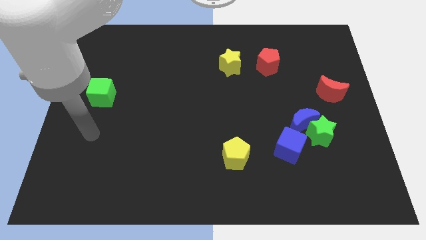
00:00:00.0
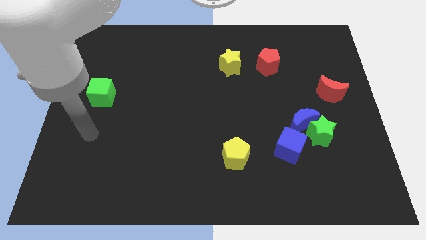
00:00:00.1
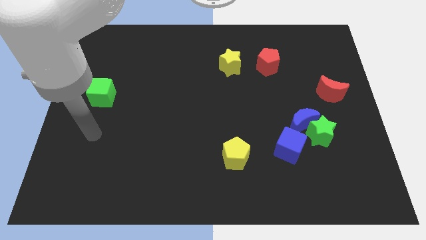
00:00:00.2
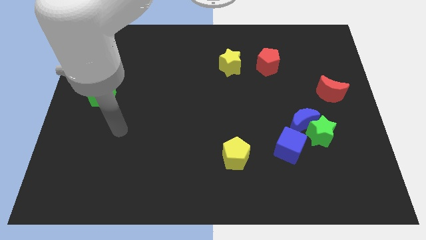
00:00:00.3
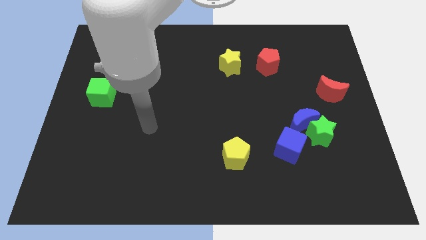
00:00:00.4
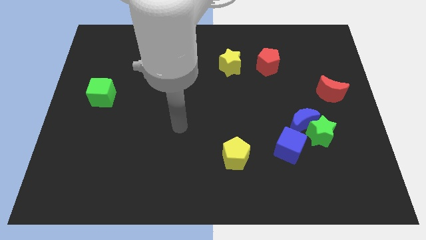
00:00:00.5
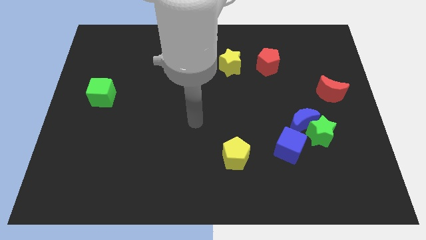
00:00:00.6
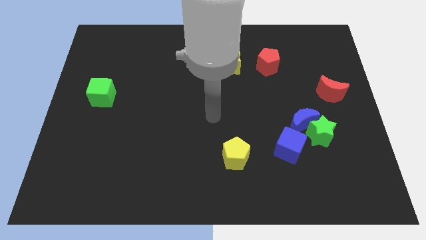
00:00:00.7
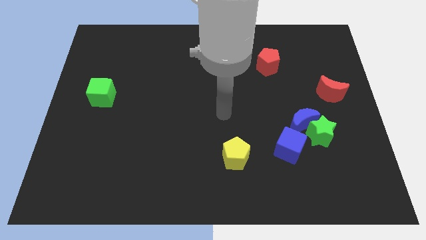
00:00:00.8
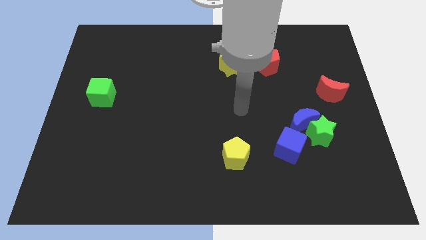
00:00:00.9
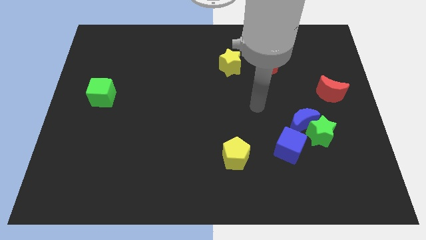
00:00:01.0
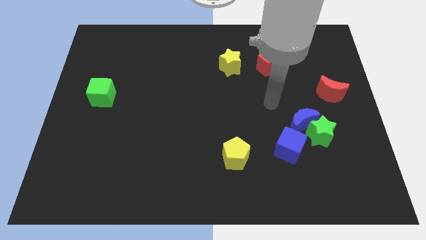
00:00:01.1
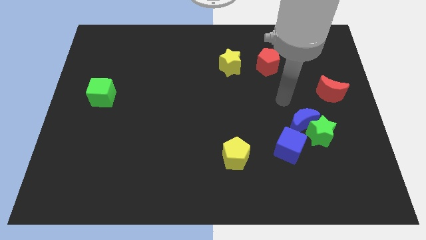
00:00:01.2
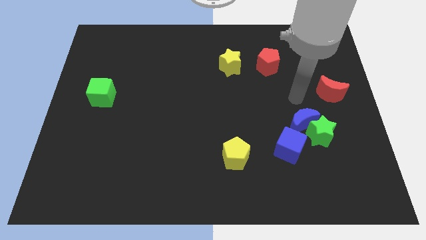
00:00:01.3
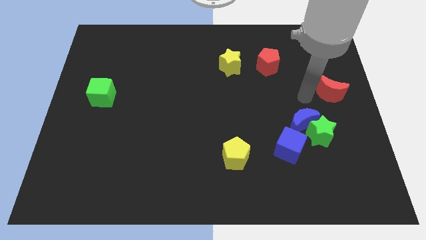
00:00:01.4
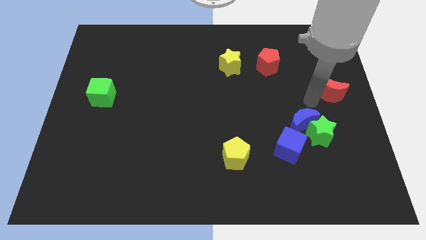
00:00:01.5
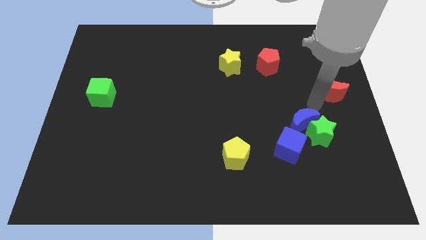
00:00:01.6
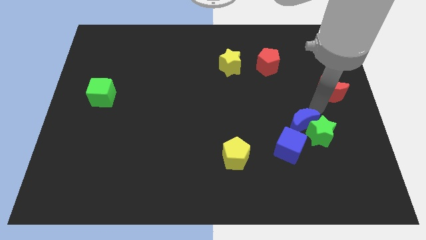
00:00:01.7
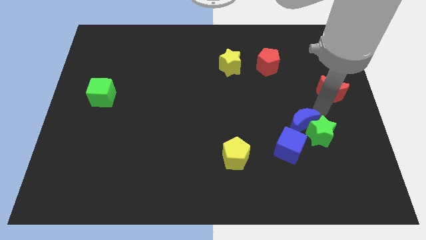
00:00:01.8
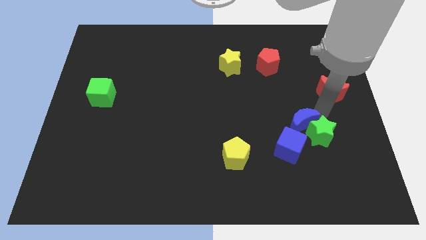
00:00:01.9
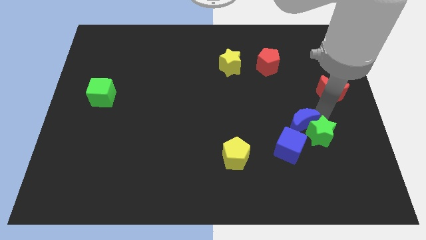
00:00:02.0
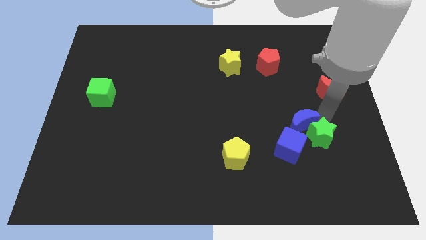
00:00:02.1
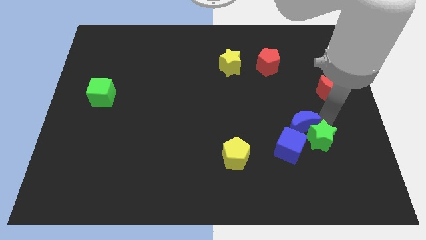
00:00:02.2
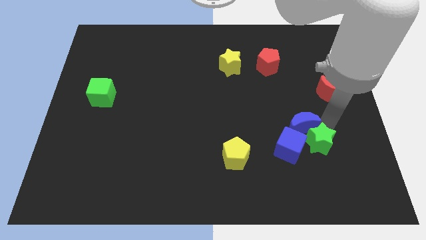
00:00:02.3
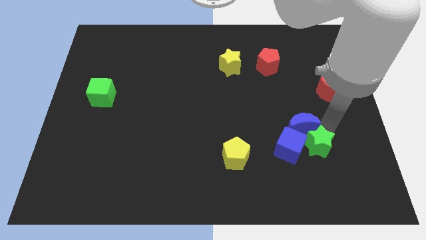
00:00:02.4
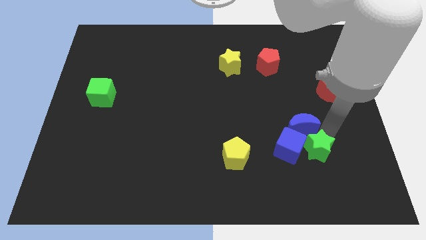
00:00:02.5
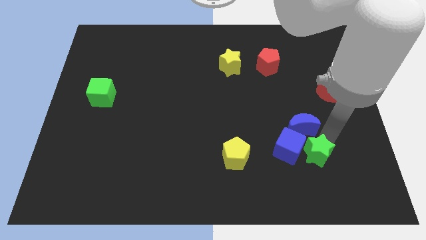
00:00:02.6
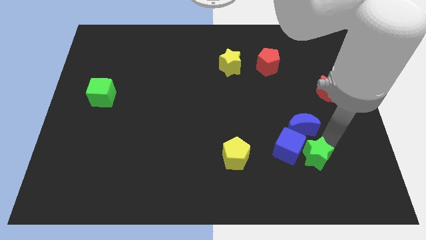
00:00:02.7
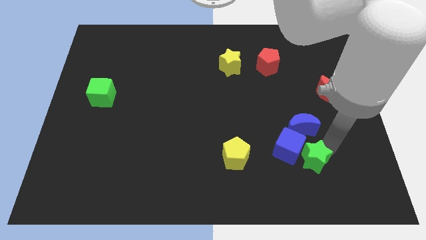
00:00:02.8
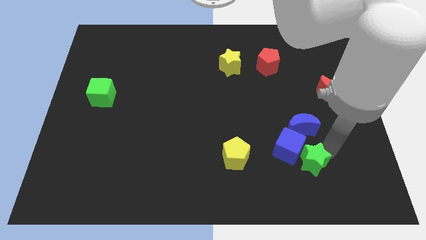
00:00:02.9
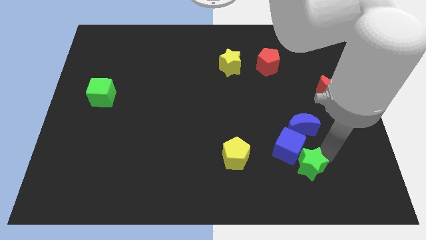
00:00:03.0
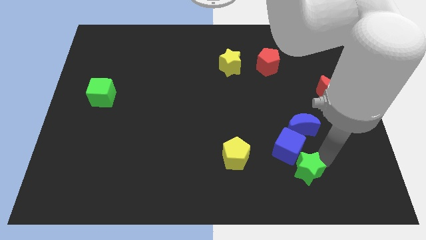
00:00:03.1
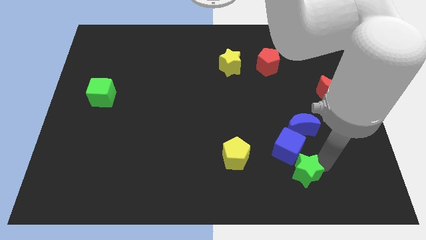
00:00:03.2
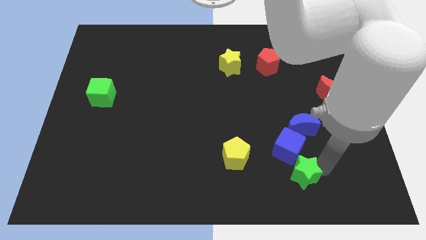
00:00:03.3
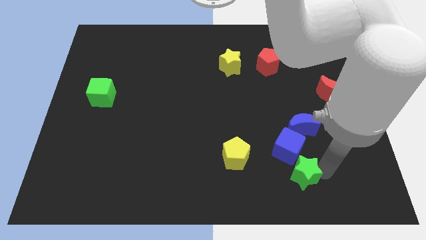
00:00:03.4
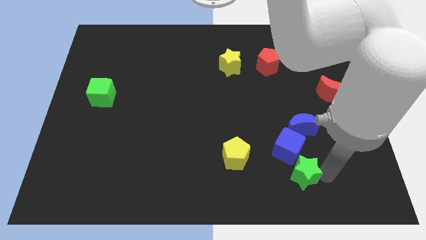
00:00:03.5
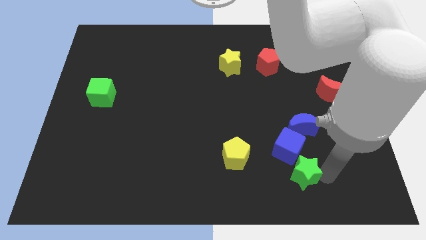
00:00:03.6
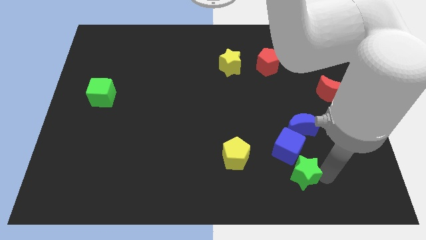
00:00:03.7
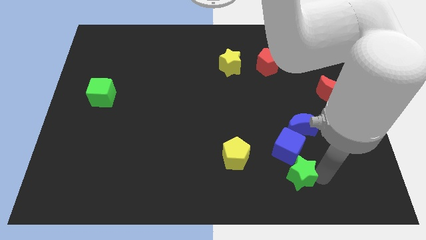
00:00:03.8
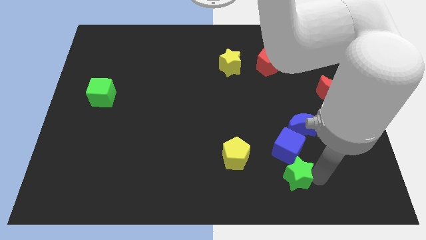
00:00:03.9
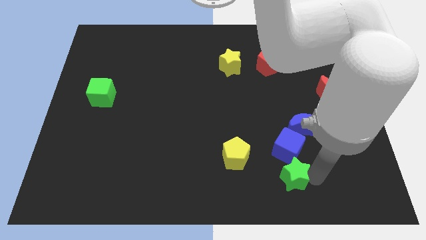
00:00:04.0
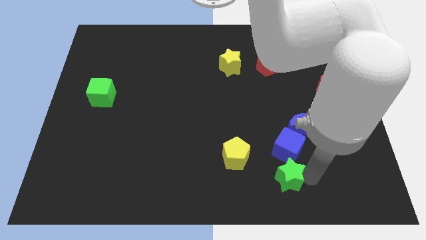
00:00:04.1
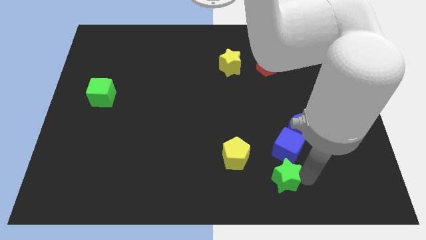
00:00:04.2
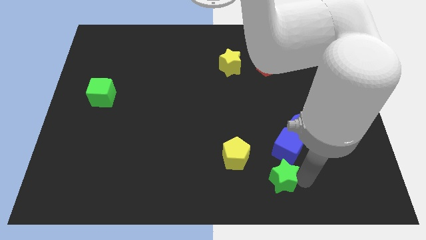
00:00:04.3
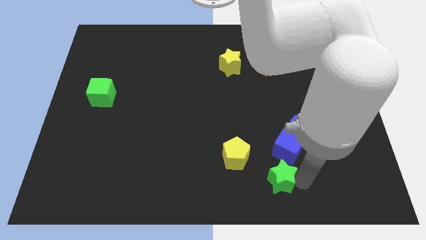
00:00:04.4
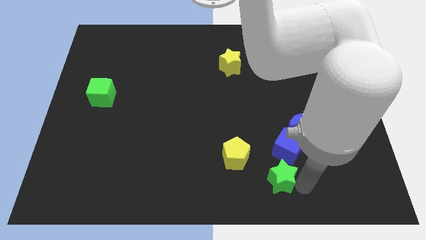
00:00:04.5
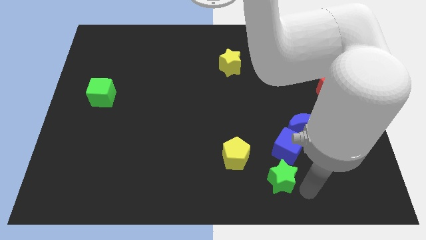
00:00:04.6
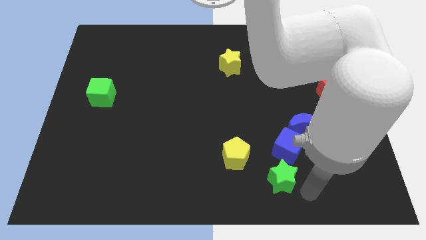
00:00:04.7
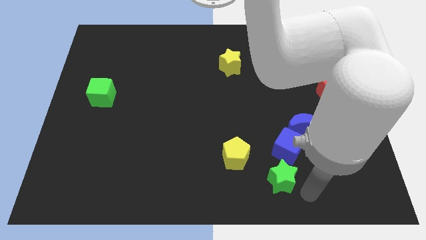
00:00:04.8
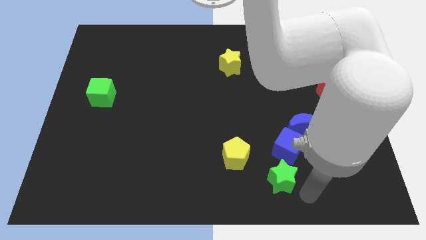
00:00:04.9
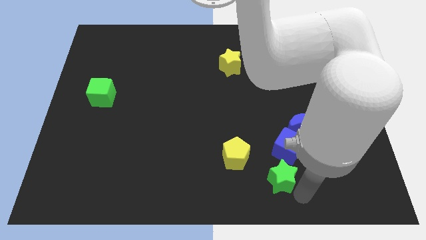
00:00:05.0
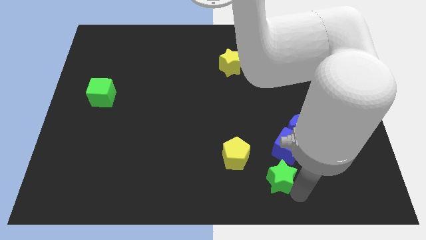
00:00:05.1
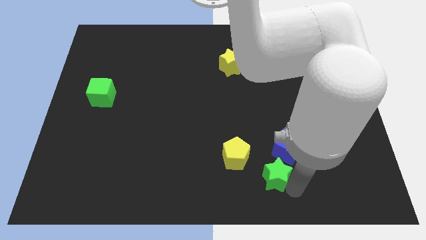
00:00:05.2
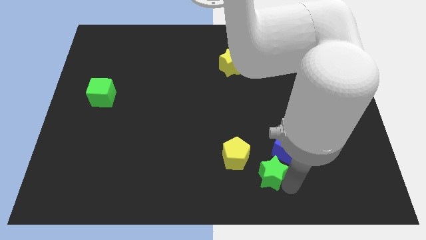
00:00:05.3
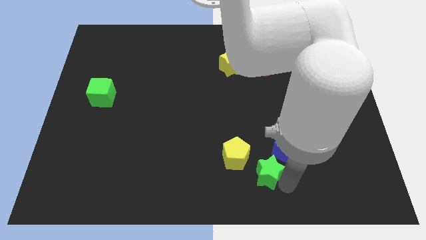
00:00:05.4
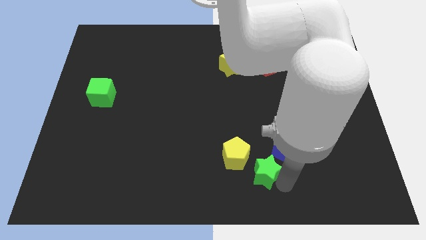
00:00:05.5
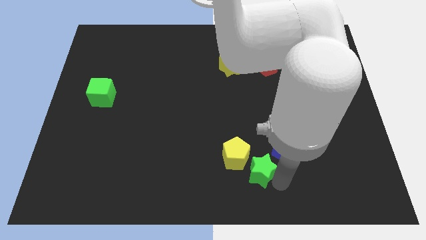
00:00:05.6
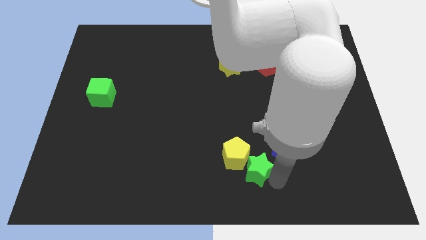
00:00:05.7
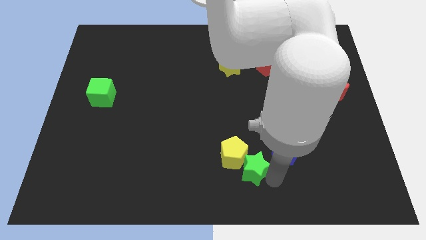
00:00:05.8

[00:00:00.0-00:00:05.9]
push the green star next to the yellow pentagon

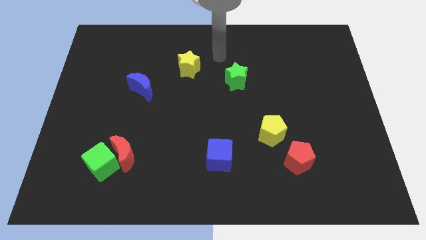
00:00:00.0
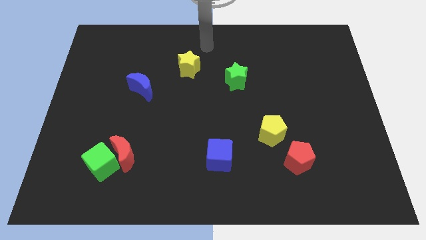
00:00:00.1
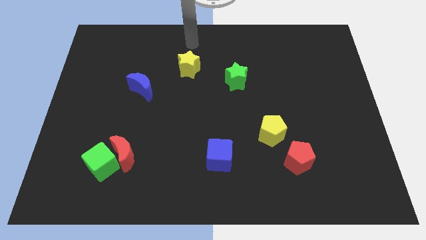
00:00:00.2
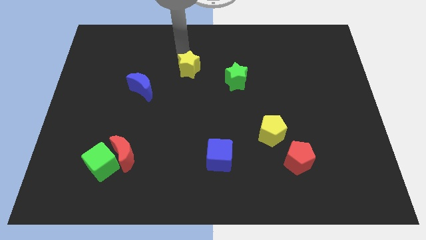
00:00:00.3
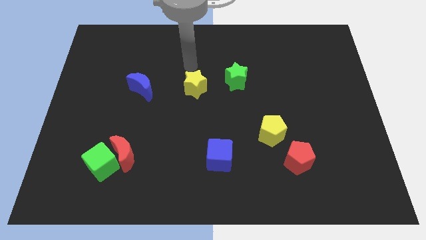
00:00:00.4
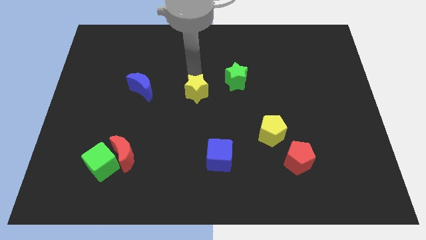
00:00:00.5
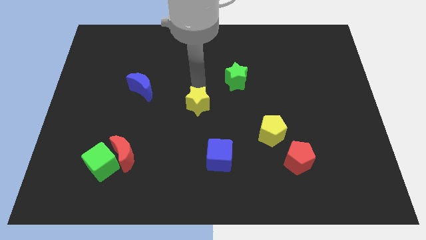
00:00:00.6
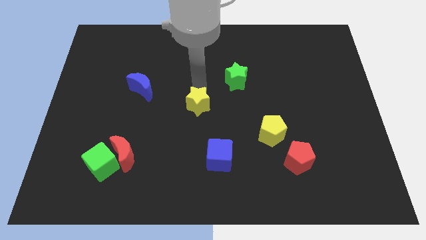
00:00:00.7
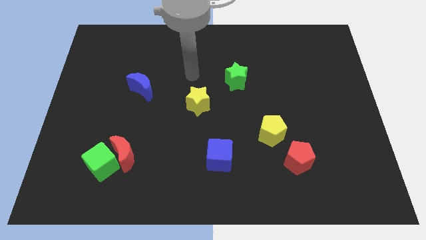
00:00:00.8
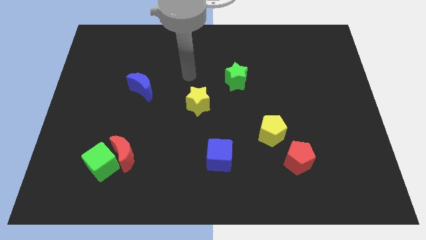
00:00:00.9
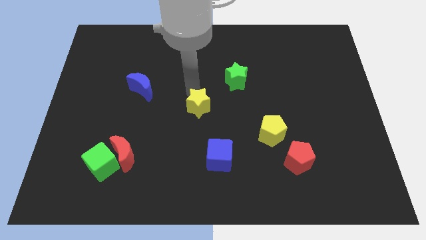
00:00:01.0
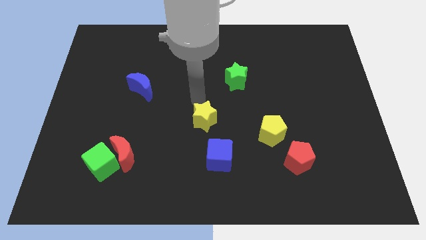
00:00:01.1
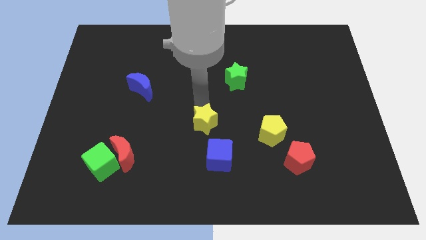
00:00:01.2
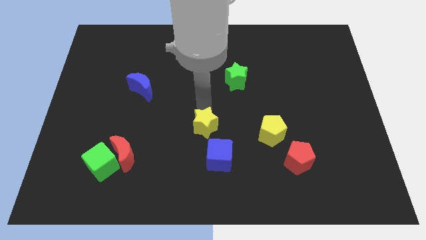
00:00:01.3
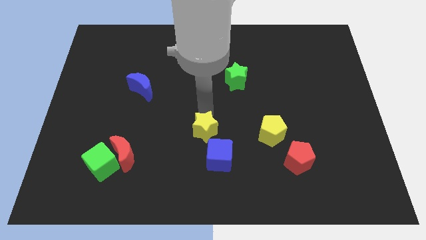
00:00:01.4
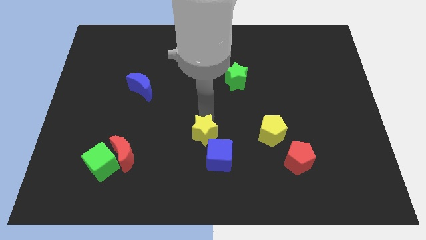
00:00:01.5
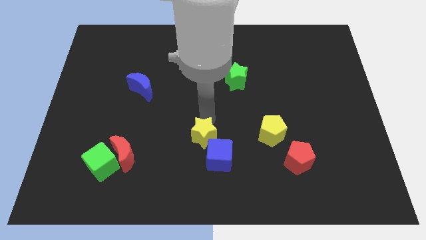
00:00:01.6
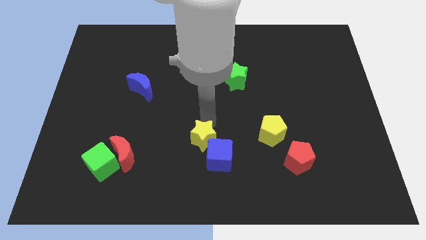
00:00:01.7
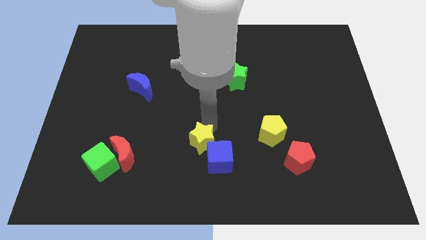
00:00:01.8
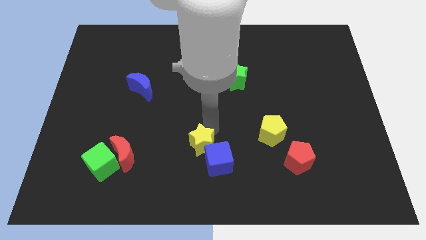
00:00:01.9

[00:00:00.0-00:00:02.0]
put the yellow star next to the blue cube

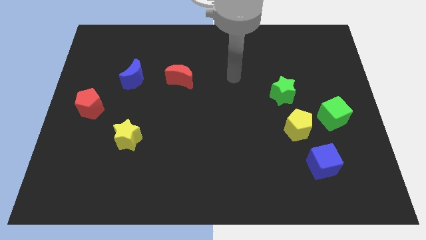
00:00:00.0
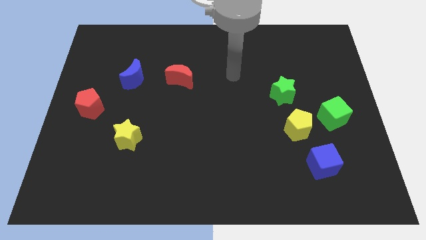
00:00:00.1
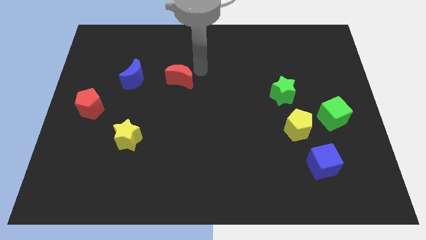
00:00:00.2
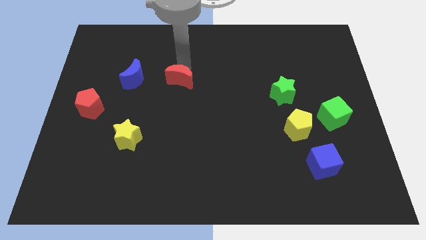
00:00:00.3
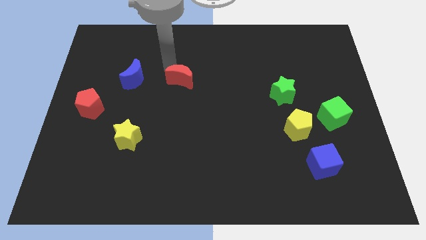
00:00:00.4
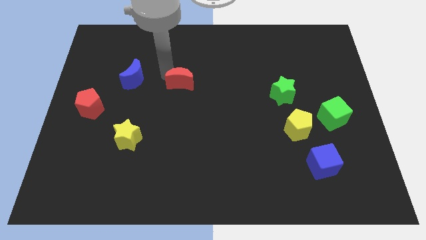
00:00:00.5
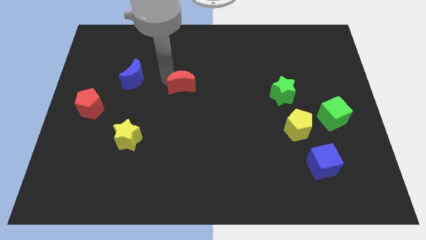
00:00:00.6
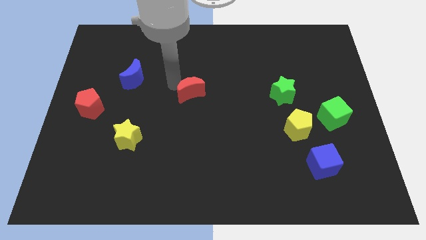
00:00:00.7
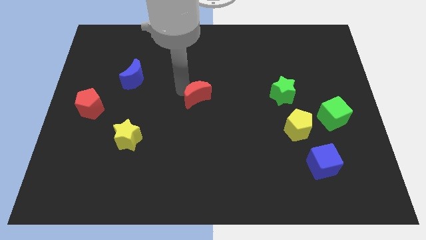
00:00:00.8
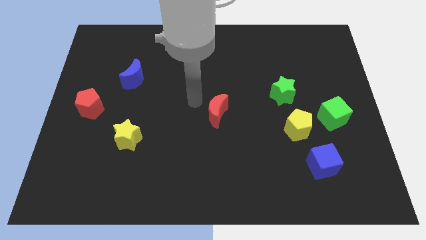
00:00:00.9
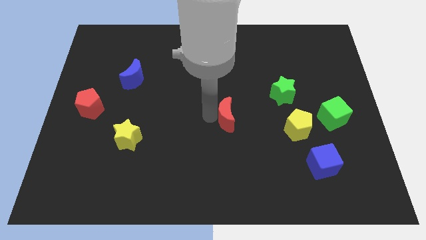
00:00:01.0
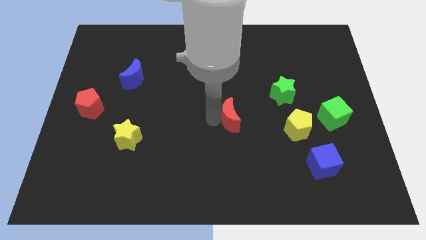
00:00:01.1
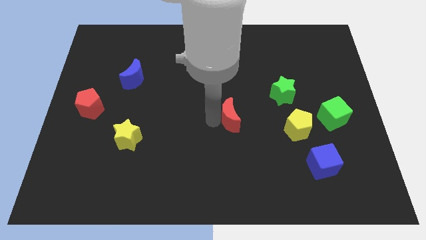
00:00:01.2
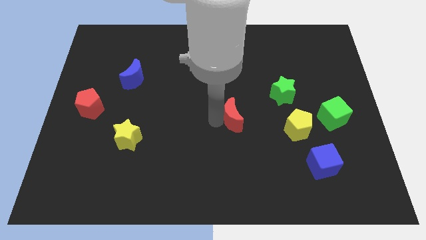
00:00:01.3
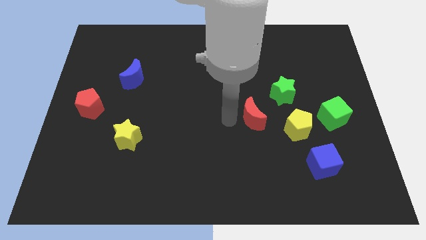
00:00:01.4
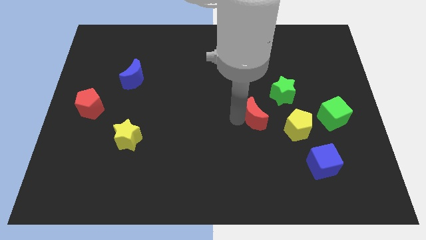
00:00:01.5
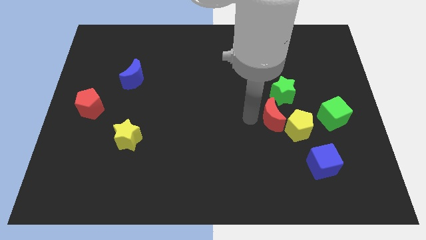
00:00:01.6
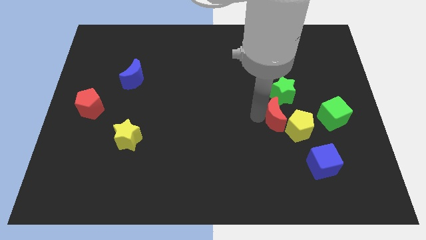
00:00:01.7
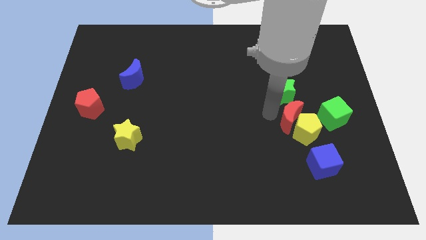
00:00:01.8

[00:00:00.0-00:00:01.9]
slide the red moon close to the yellow pentagon
